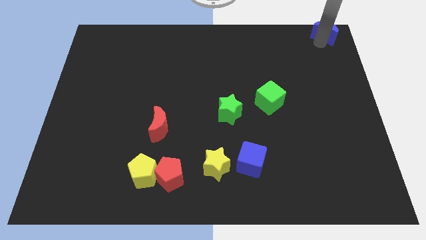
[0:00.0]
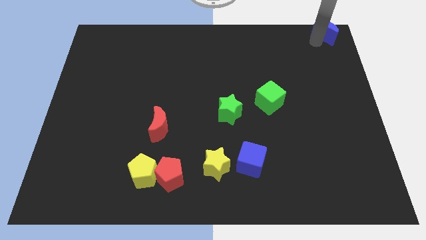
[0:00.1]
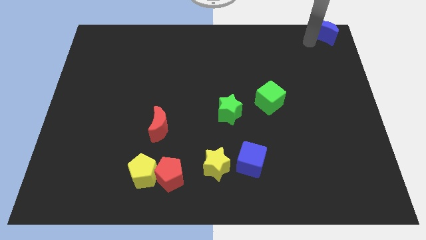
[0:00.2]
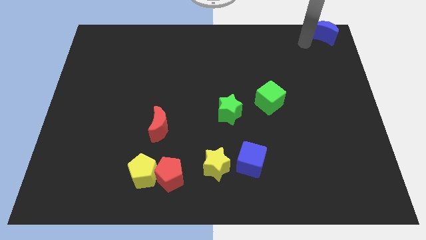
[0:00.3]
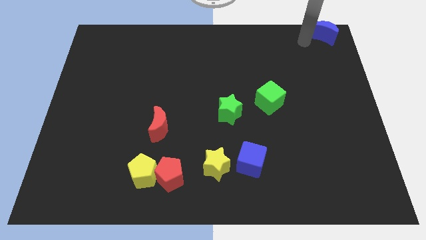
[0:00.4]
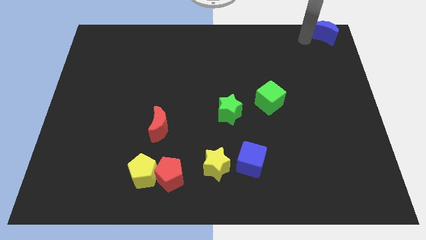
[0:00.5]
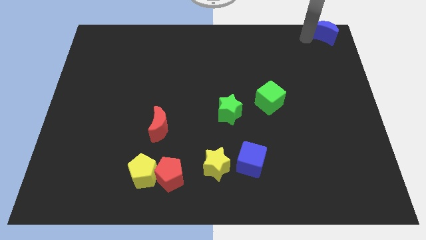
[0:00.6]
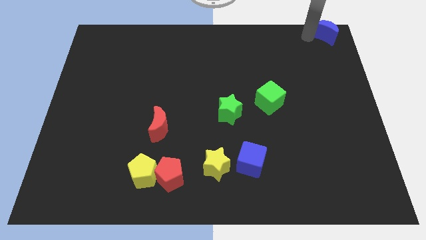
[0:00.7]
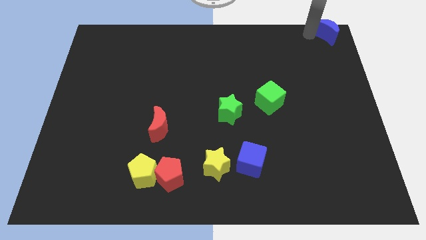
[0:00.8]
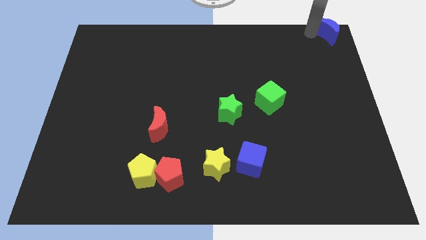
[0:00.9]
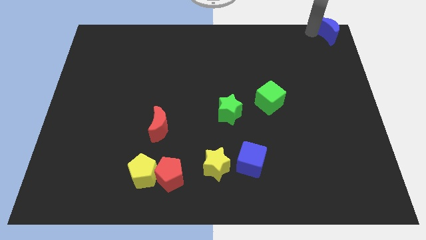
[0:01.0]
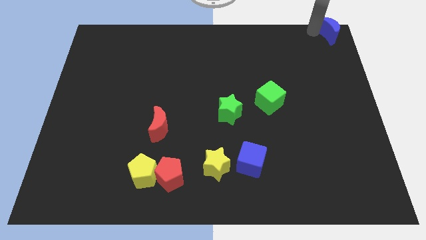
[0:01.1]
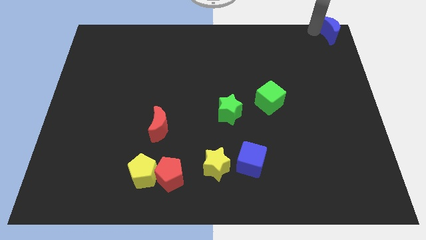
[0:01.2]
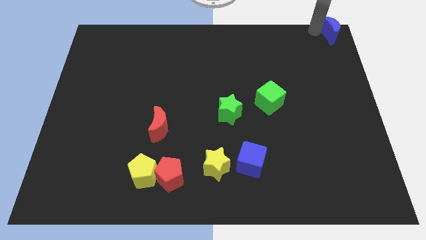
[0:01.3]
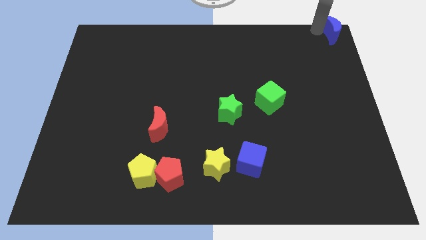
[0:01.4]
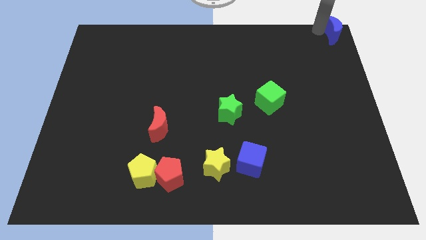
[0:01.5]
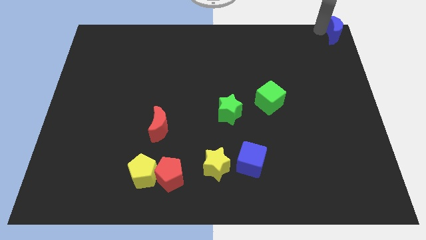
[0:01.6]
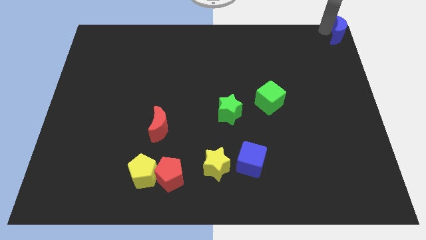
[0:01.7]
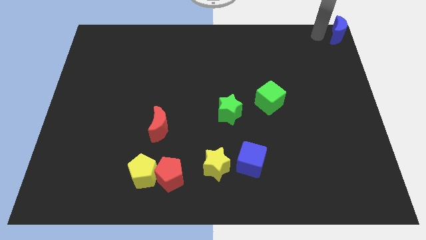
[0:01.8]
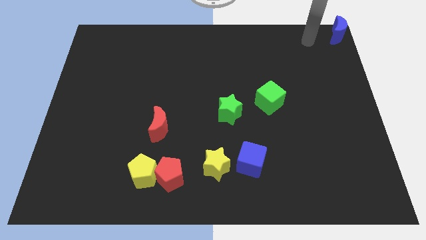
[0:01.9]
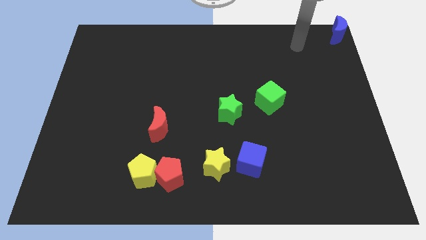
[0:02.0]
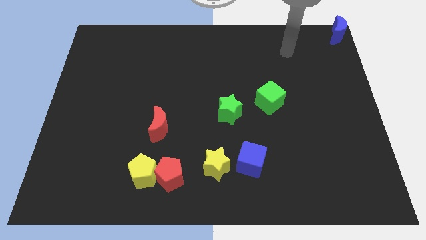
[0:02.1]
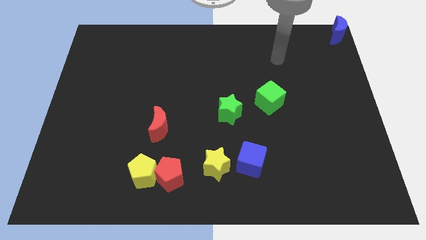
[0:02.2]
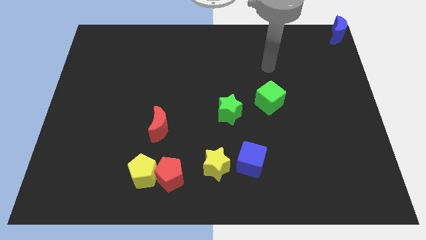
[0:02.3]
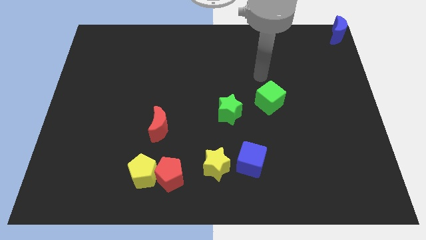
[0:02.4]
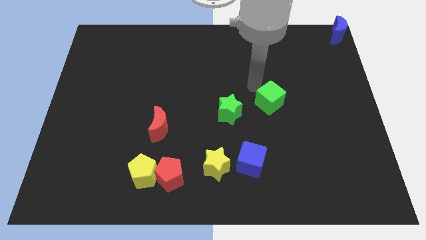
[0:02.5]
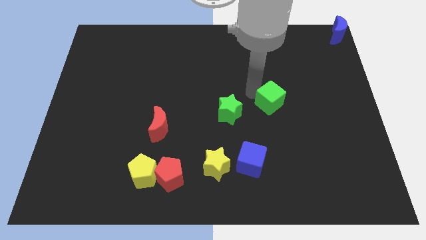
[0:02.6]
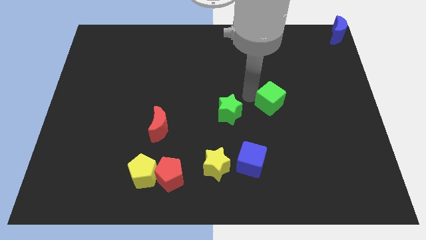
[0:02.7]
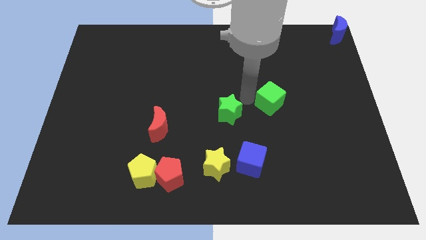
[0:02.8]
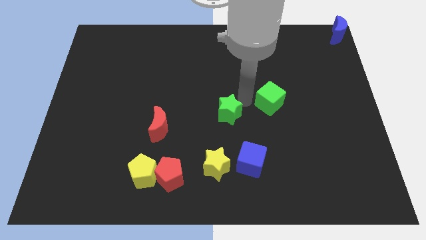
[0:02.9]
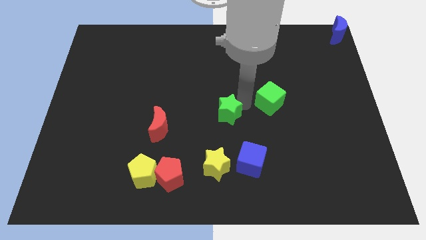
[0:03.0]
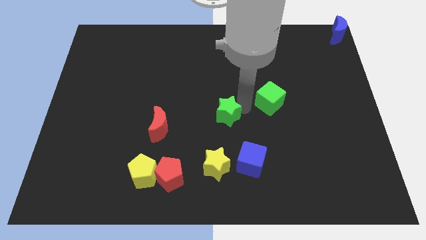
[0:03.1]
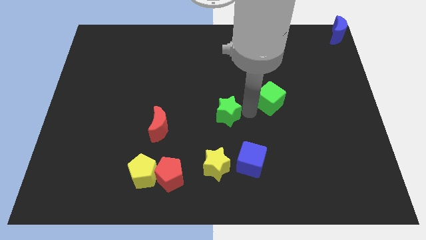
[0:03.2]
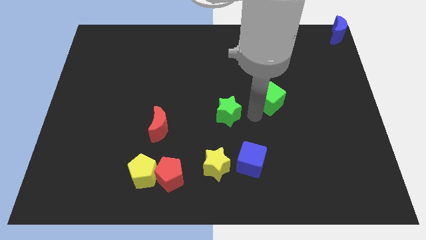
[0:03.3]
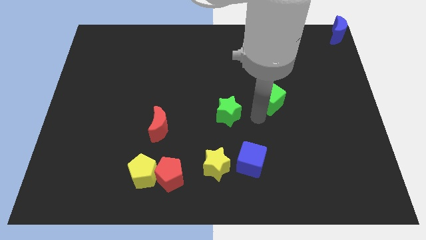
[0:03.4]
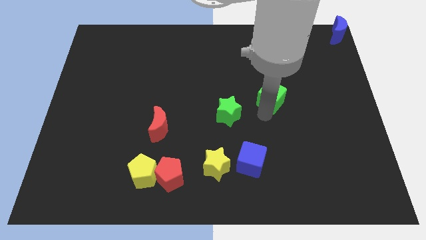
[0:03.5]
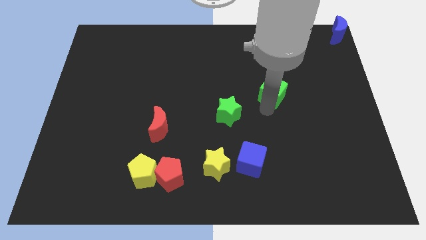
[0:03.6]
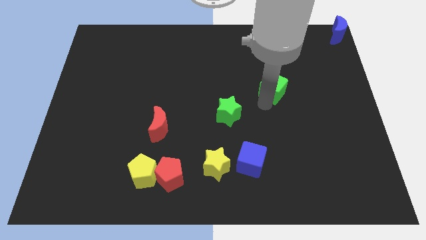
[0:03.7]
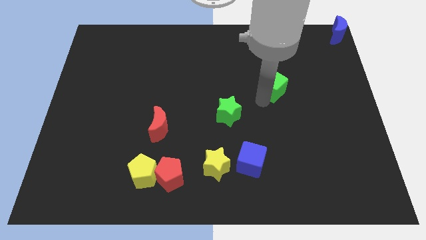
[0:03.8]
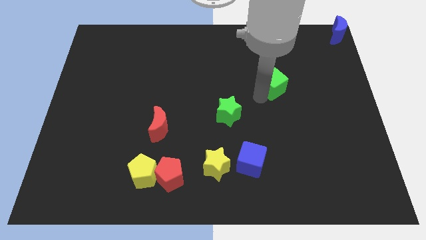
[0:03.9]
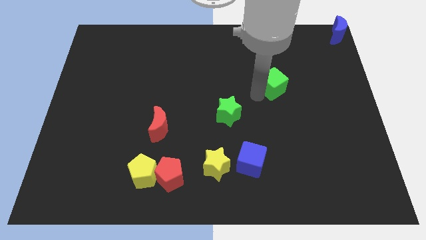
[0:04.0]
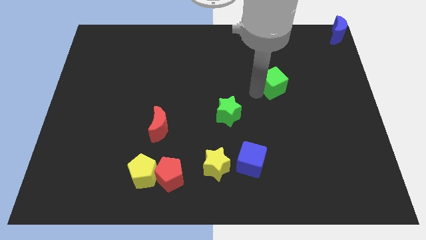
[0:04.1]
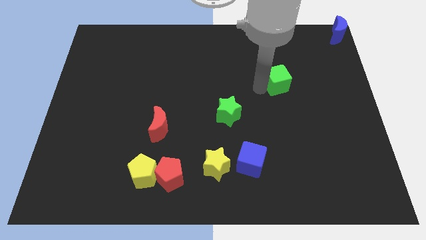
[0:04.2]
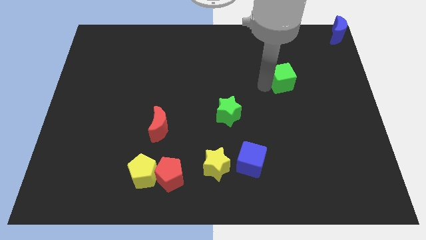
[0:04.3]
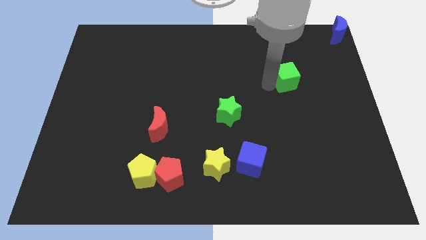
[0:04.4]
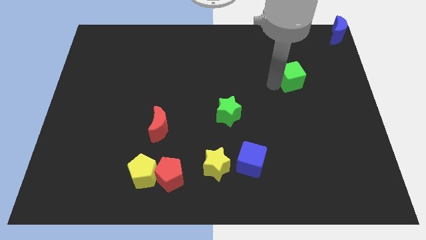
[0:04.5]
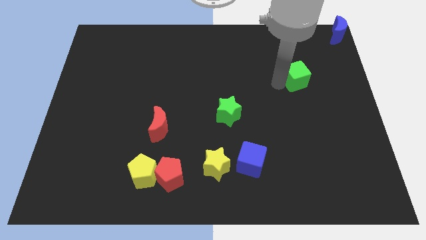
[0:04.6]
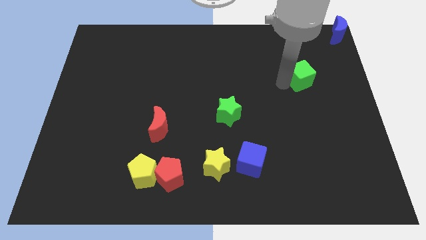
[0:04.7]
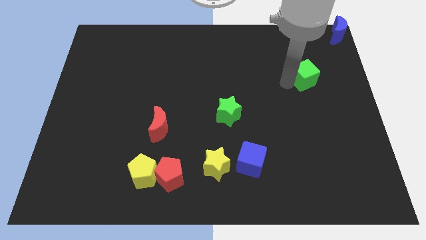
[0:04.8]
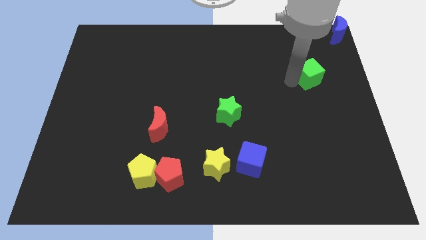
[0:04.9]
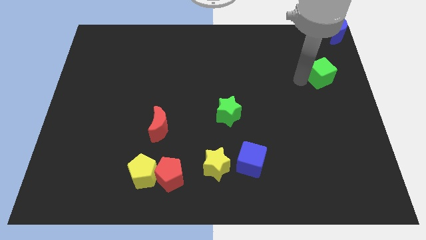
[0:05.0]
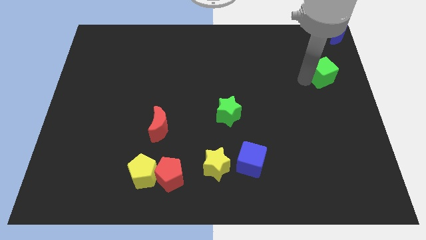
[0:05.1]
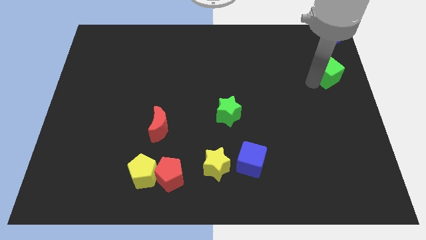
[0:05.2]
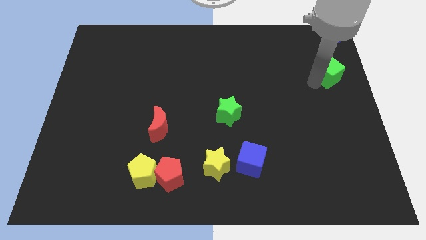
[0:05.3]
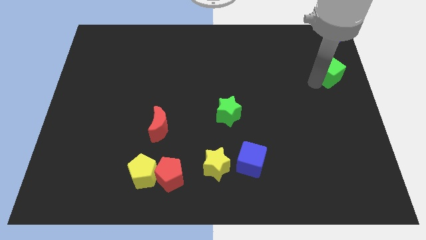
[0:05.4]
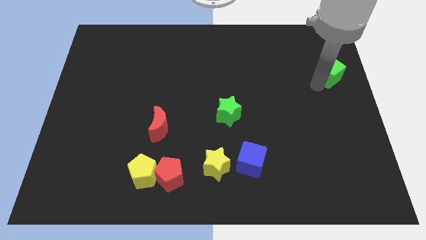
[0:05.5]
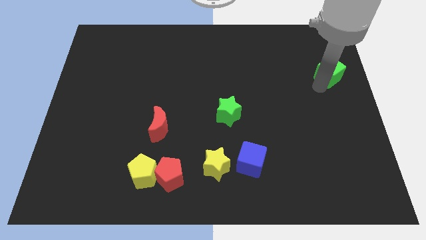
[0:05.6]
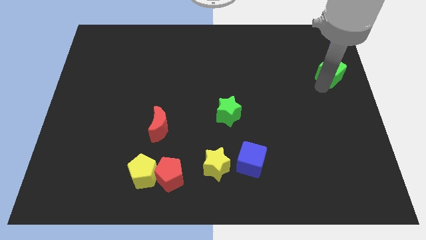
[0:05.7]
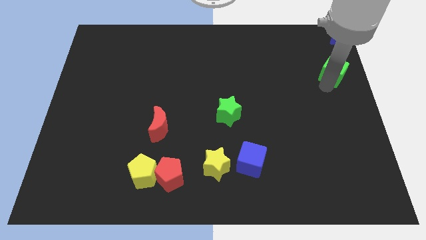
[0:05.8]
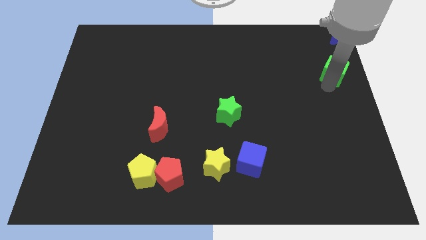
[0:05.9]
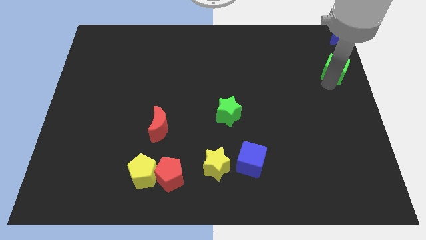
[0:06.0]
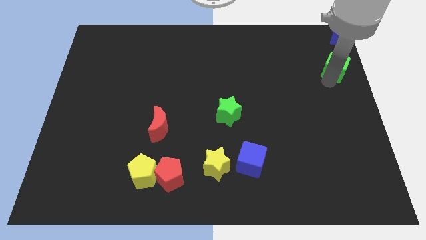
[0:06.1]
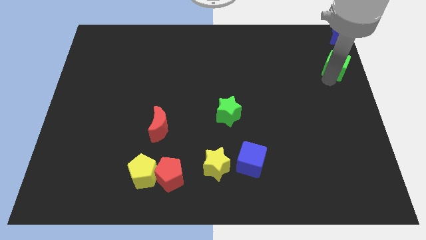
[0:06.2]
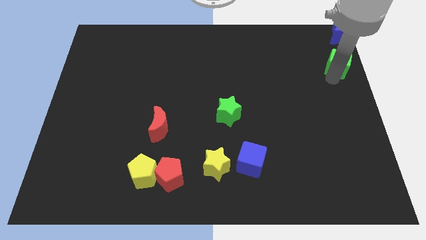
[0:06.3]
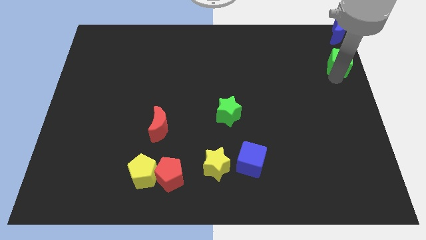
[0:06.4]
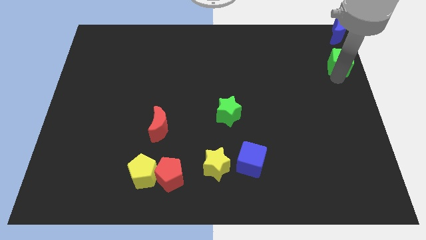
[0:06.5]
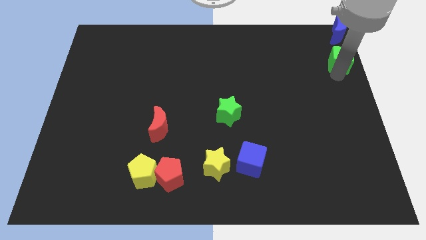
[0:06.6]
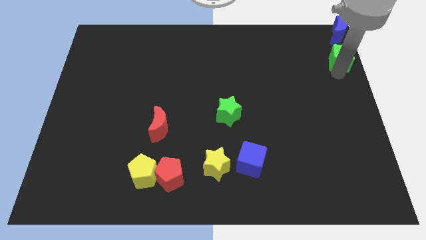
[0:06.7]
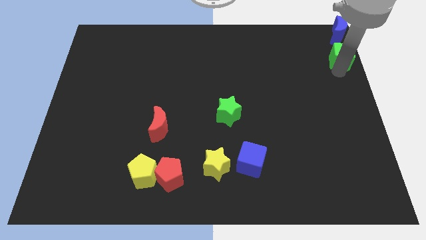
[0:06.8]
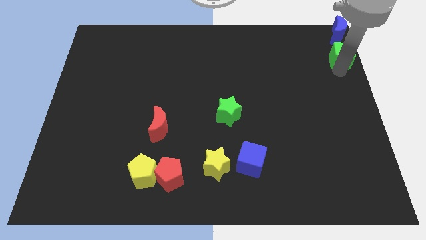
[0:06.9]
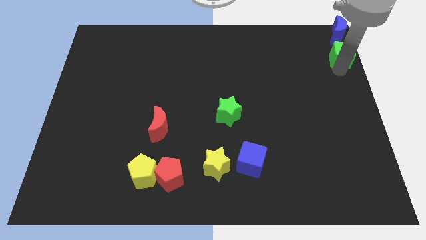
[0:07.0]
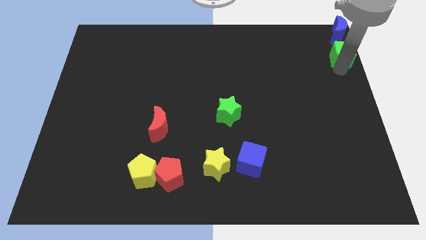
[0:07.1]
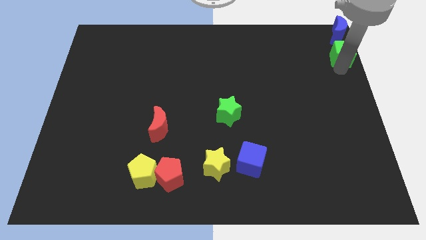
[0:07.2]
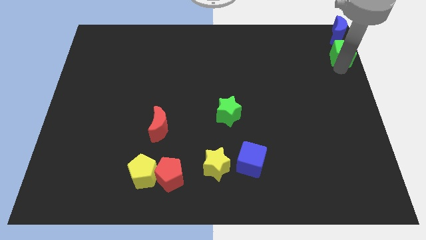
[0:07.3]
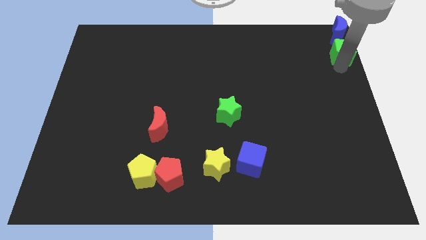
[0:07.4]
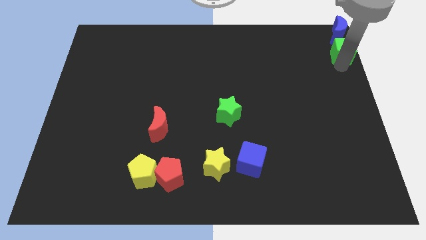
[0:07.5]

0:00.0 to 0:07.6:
drag the green cube bottom to the blue moon

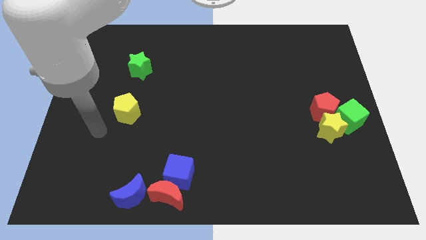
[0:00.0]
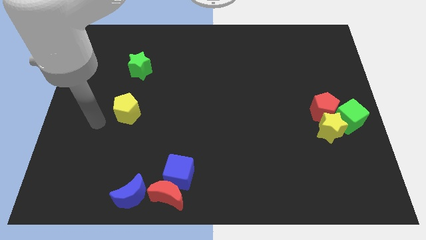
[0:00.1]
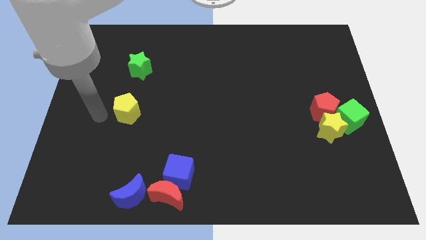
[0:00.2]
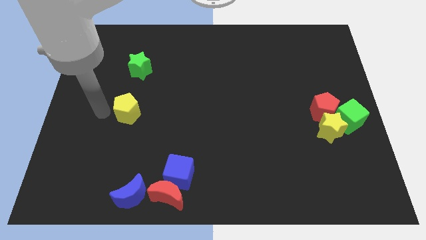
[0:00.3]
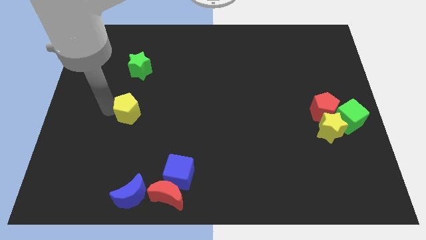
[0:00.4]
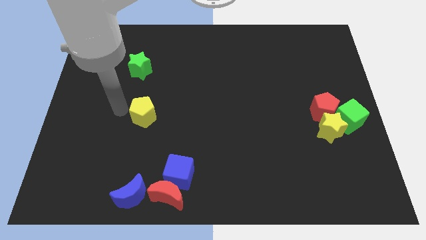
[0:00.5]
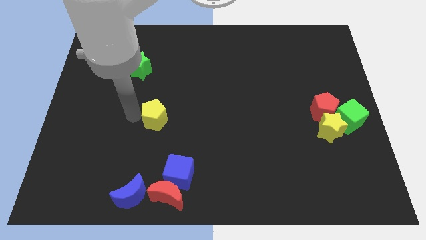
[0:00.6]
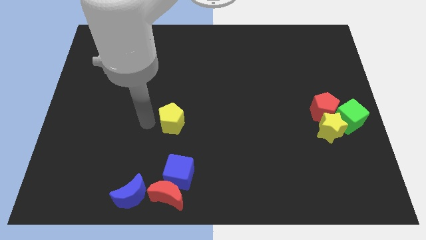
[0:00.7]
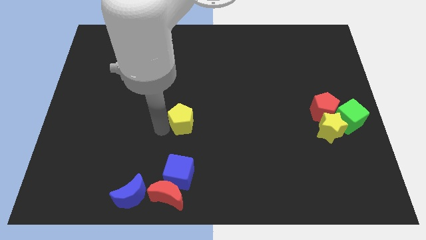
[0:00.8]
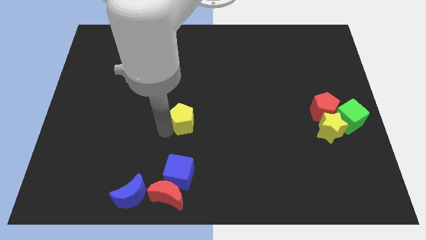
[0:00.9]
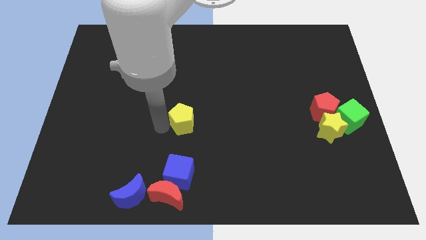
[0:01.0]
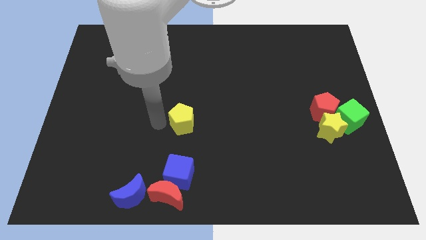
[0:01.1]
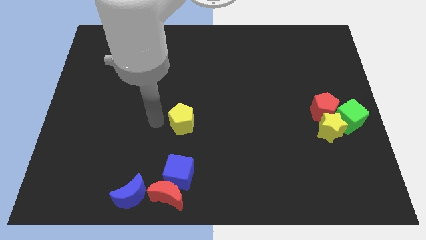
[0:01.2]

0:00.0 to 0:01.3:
drag yellow pentagon parallel to red pentagon
